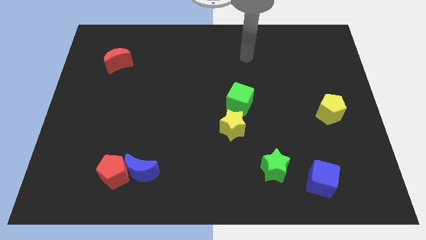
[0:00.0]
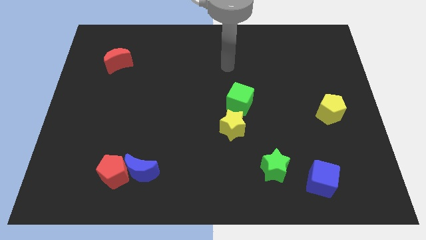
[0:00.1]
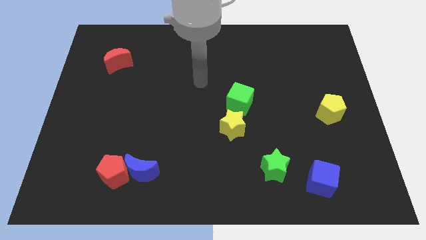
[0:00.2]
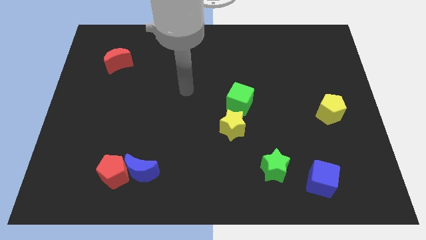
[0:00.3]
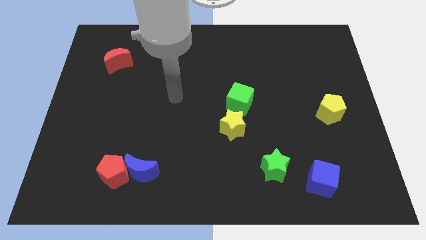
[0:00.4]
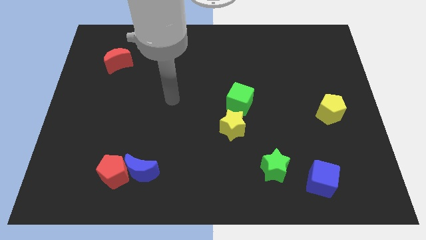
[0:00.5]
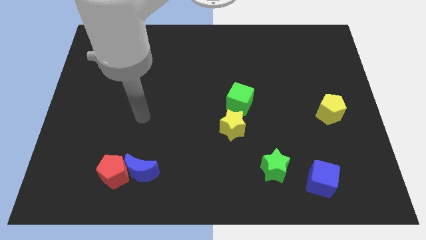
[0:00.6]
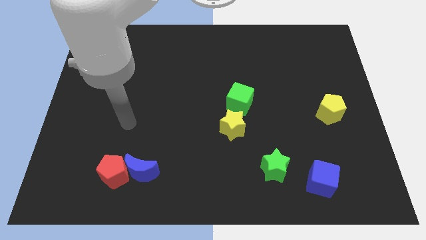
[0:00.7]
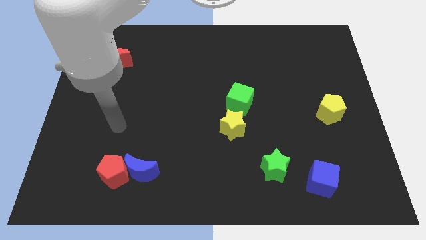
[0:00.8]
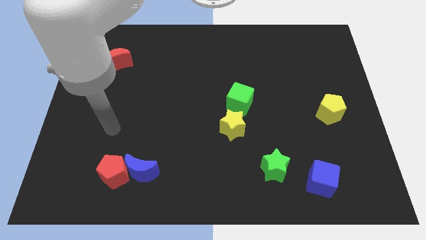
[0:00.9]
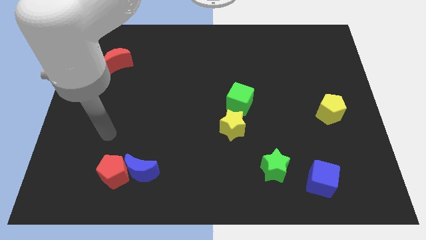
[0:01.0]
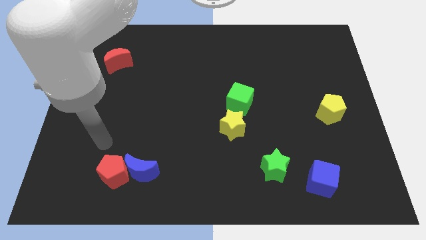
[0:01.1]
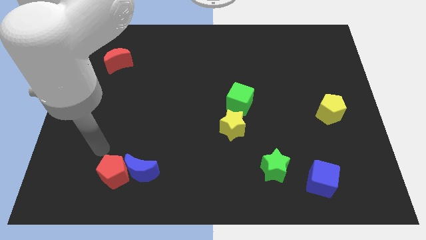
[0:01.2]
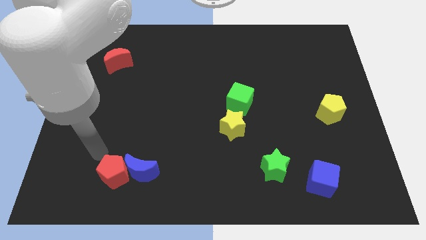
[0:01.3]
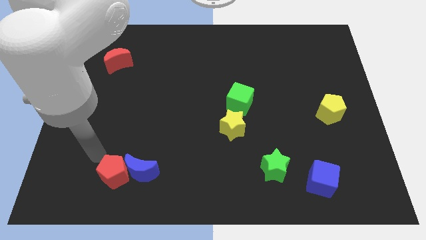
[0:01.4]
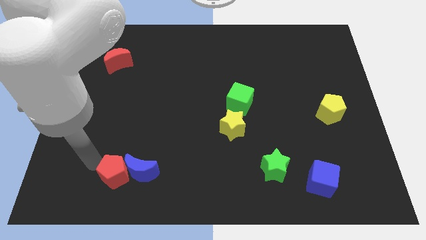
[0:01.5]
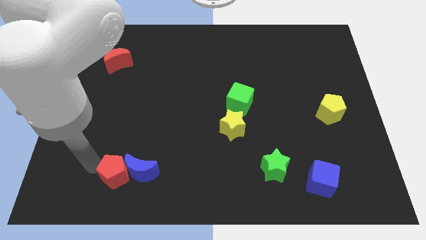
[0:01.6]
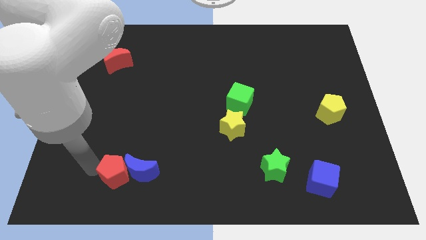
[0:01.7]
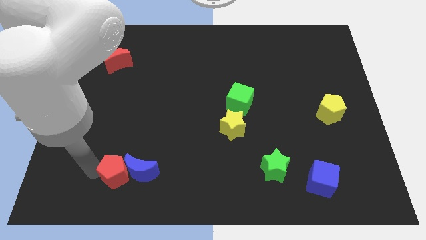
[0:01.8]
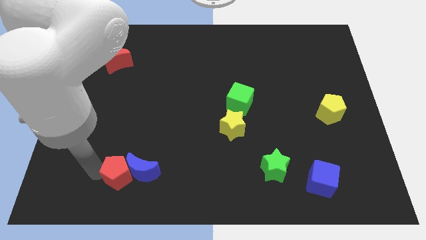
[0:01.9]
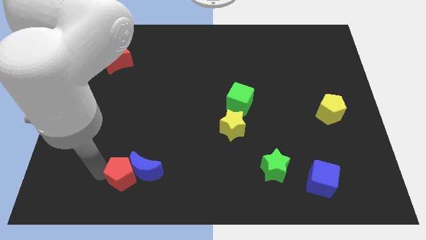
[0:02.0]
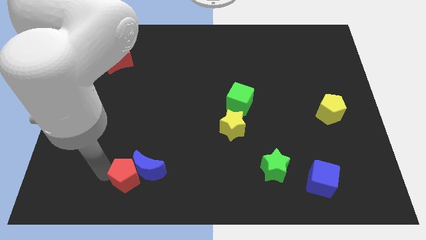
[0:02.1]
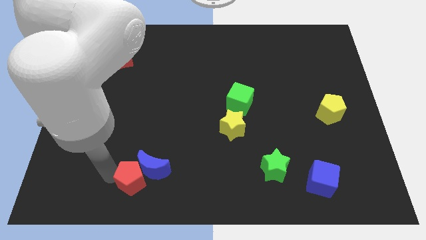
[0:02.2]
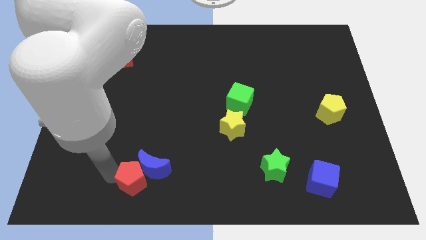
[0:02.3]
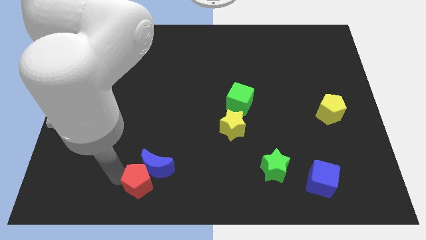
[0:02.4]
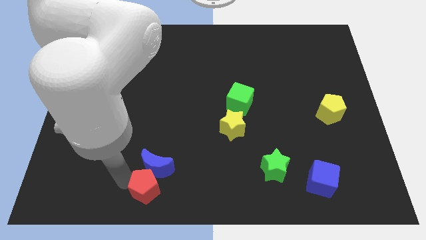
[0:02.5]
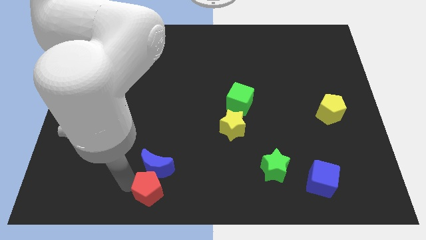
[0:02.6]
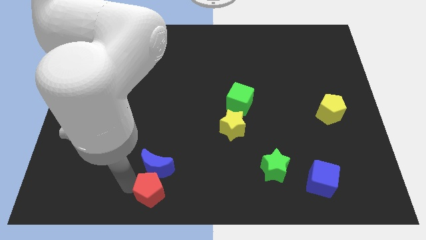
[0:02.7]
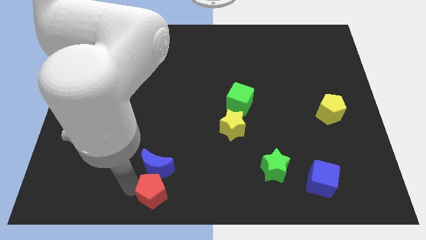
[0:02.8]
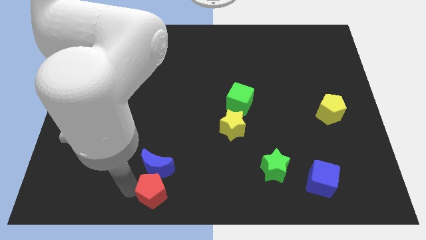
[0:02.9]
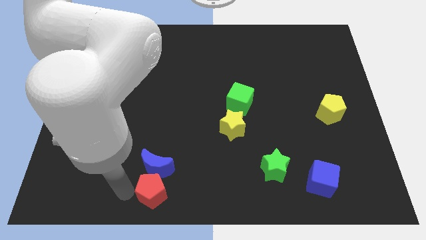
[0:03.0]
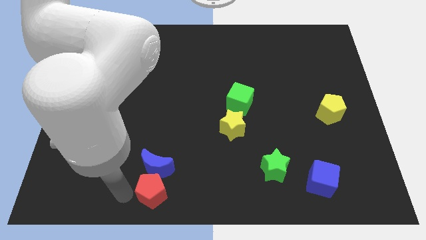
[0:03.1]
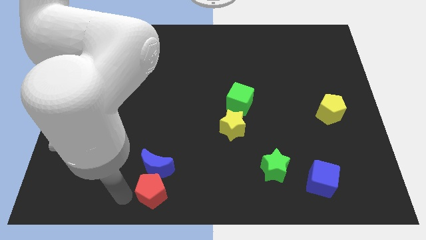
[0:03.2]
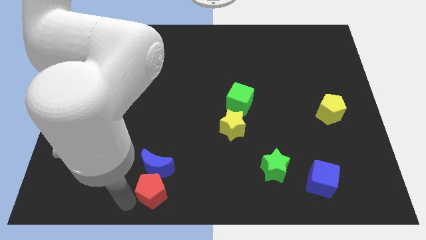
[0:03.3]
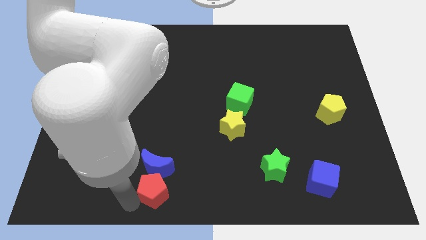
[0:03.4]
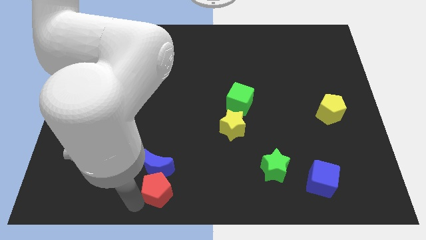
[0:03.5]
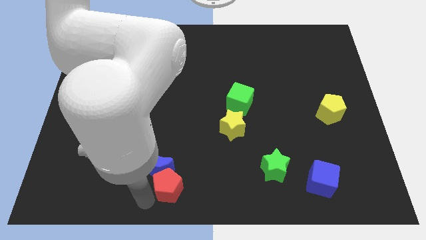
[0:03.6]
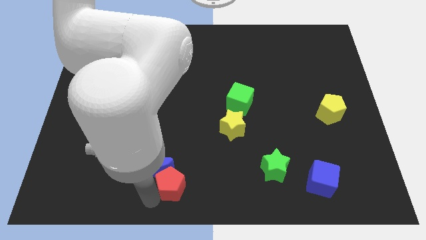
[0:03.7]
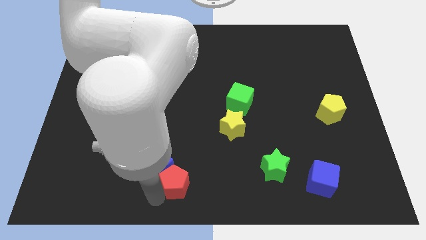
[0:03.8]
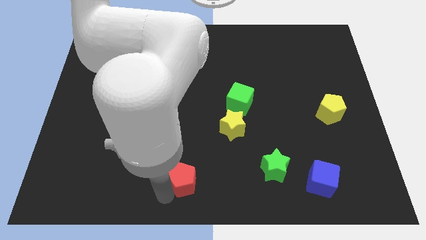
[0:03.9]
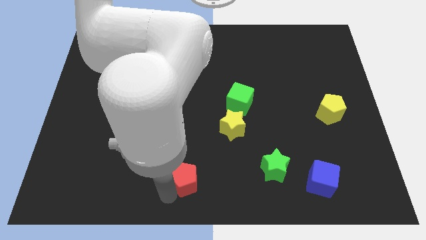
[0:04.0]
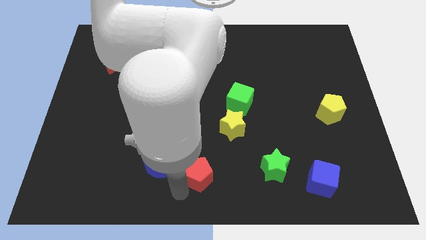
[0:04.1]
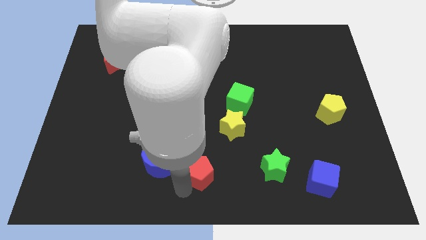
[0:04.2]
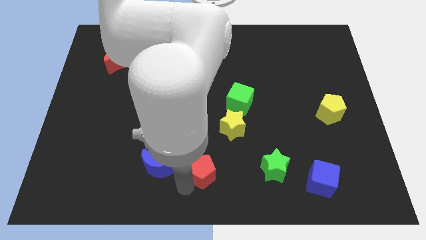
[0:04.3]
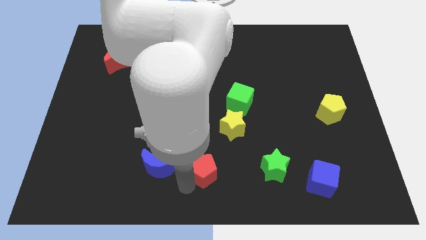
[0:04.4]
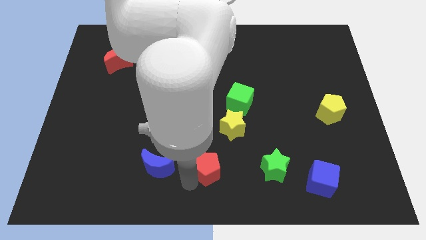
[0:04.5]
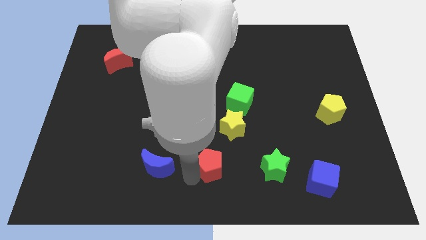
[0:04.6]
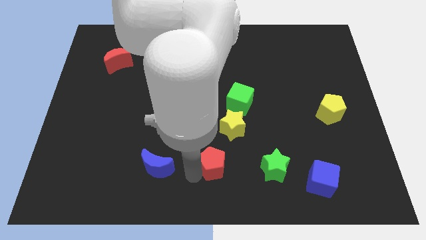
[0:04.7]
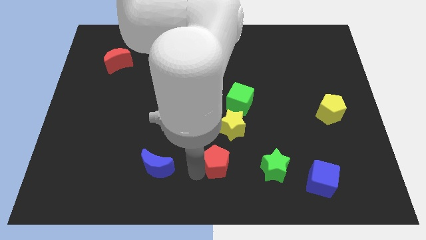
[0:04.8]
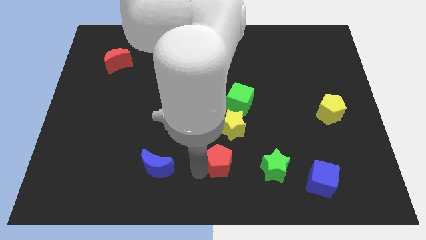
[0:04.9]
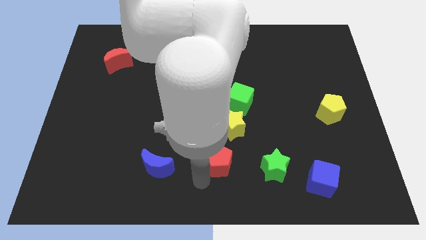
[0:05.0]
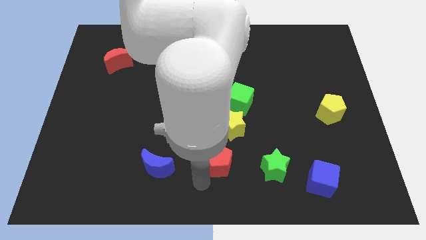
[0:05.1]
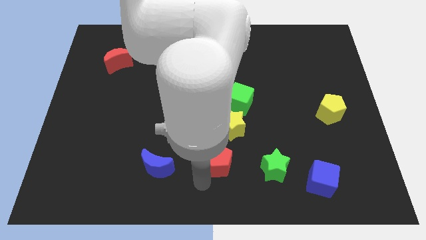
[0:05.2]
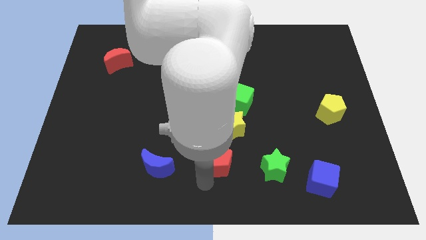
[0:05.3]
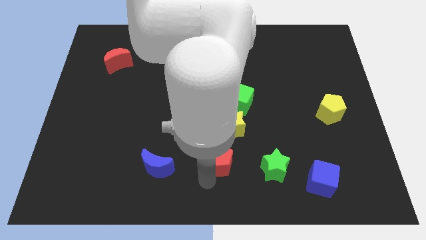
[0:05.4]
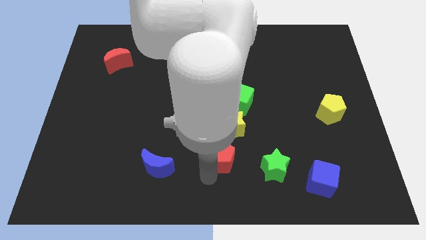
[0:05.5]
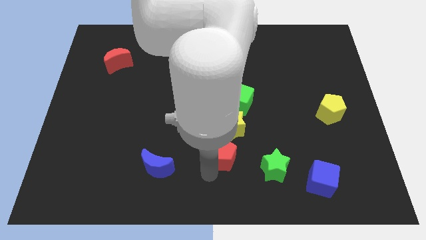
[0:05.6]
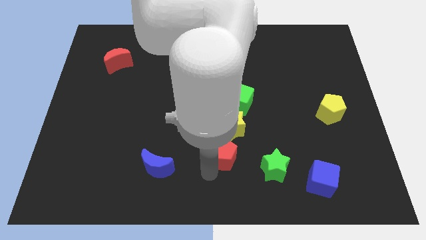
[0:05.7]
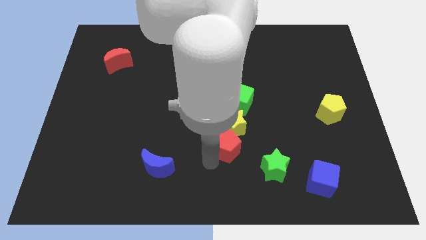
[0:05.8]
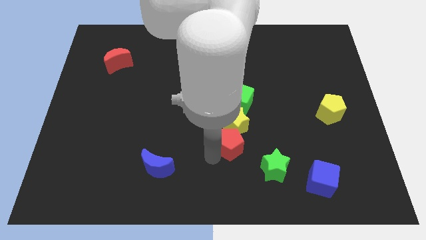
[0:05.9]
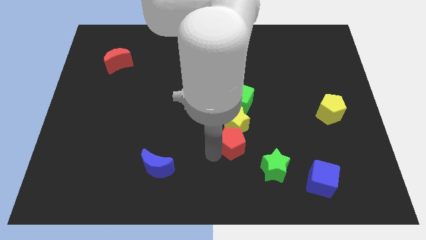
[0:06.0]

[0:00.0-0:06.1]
put the red pentagon close to the yellow star

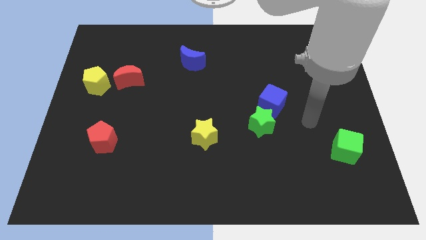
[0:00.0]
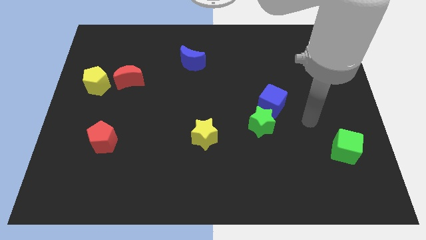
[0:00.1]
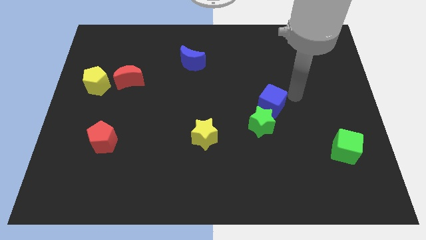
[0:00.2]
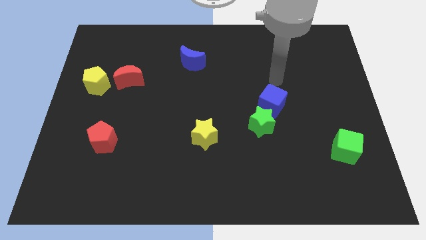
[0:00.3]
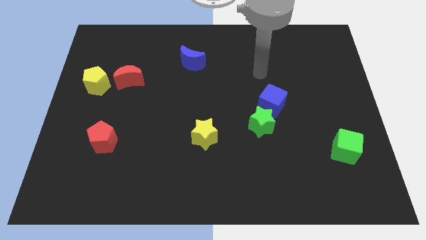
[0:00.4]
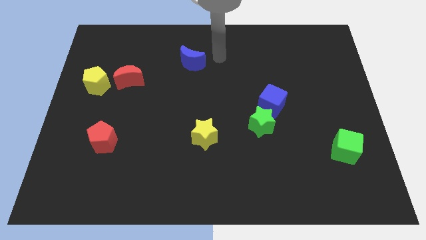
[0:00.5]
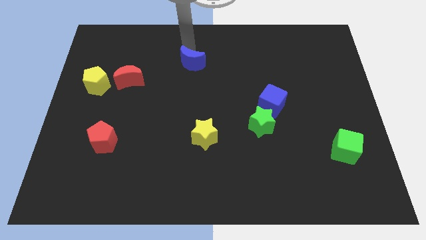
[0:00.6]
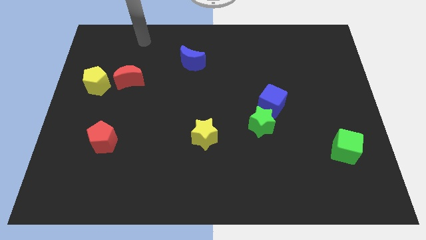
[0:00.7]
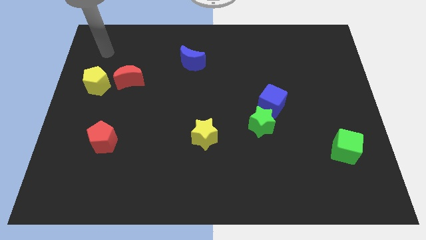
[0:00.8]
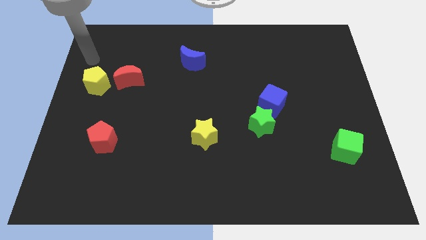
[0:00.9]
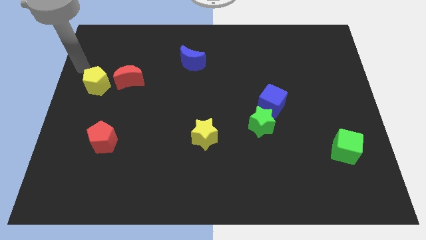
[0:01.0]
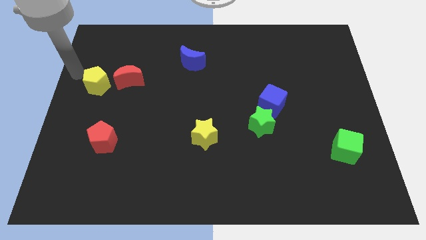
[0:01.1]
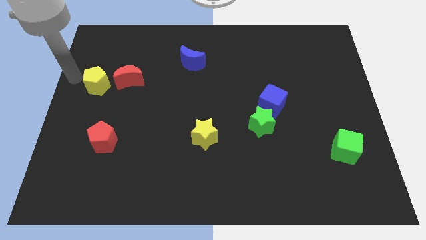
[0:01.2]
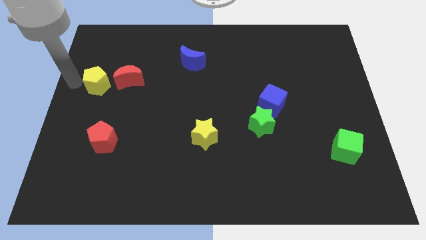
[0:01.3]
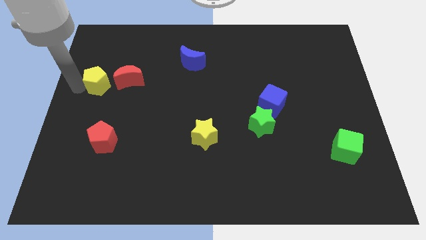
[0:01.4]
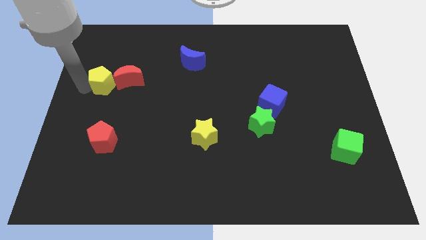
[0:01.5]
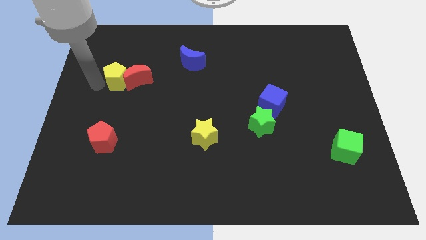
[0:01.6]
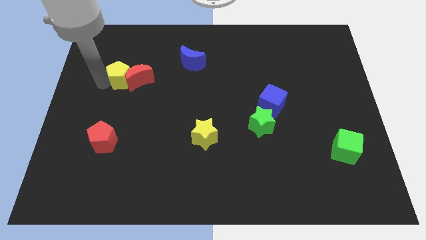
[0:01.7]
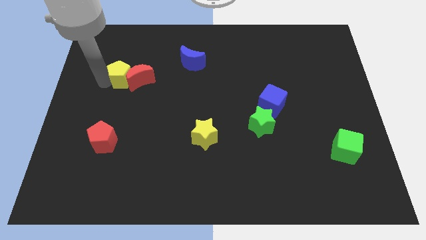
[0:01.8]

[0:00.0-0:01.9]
push the yellow pentagon to the red moon

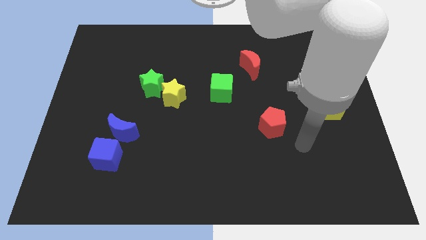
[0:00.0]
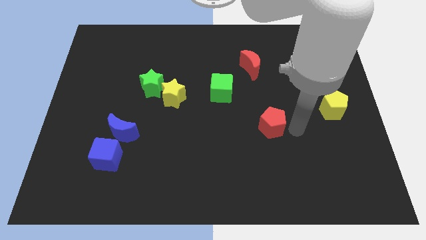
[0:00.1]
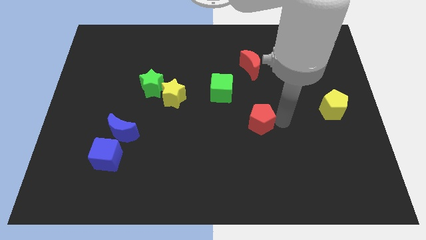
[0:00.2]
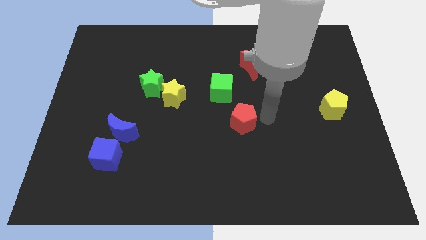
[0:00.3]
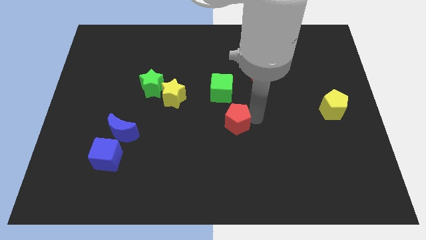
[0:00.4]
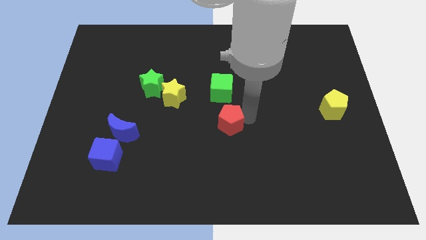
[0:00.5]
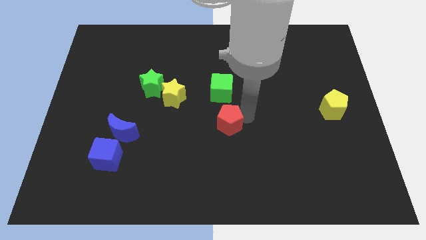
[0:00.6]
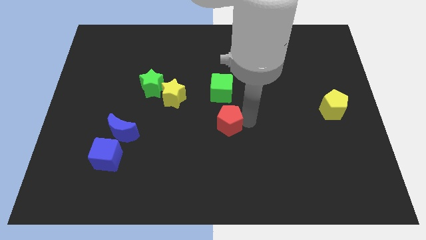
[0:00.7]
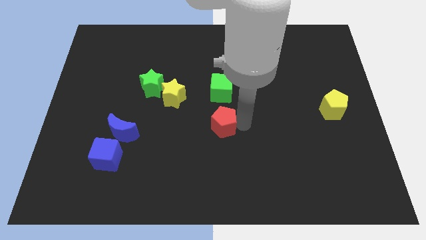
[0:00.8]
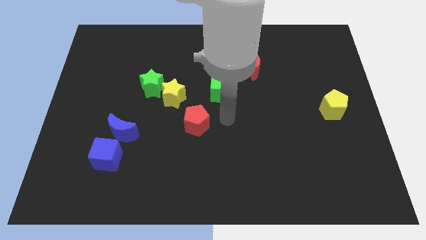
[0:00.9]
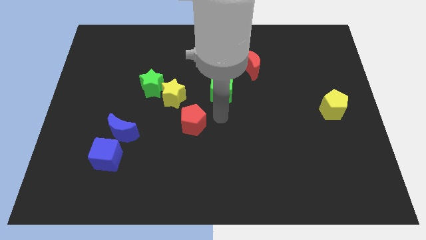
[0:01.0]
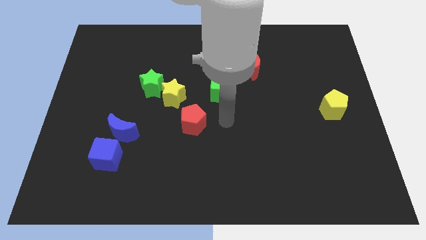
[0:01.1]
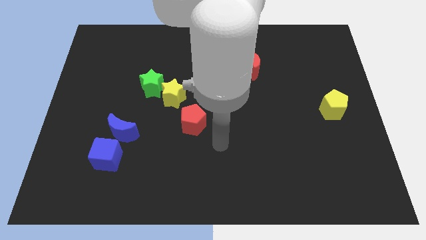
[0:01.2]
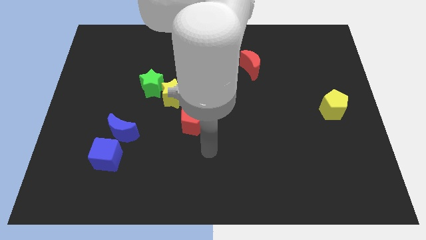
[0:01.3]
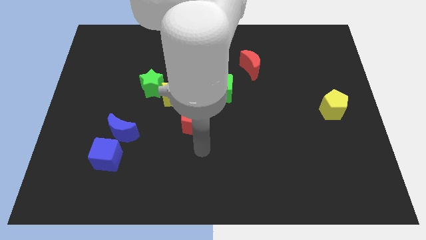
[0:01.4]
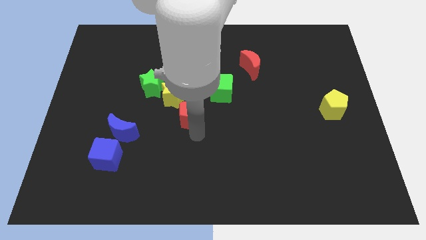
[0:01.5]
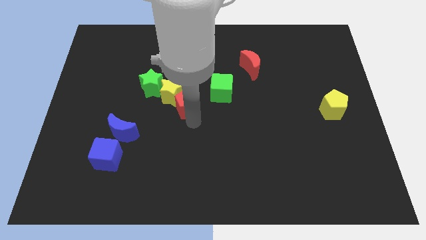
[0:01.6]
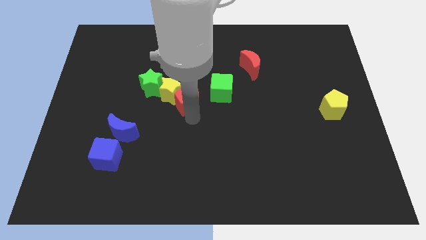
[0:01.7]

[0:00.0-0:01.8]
push the red pentagon to the yellow star
